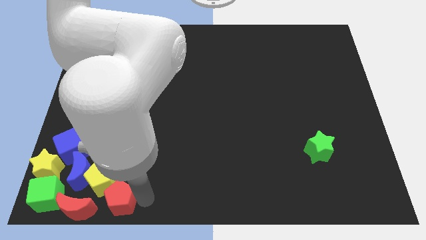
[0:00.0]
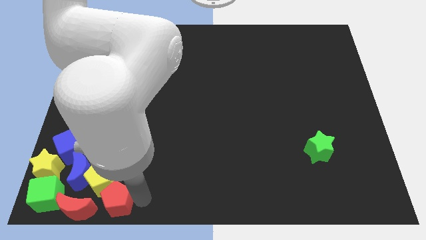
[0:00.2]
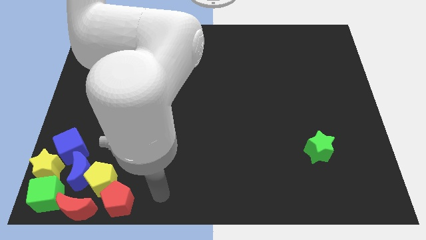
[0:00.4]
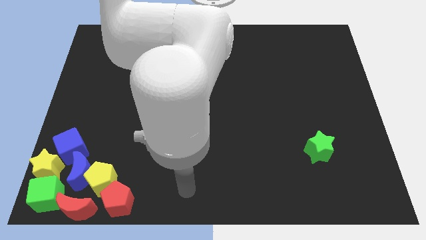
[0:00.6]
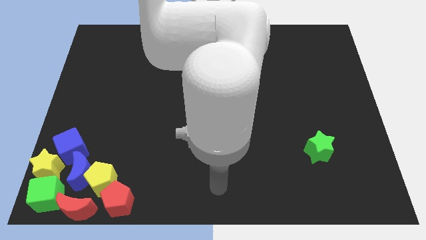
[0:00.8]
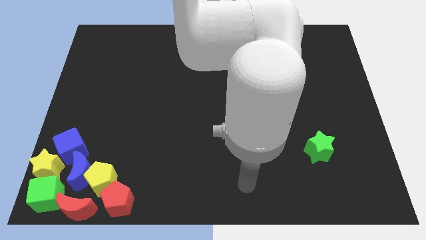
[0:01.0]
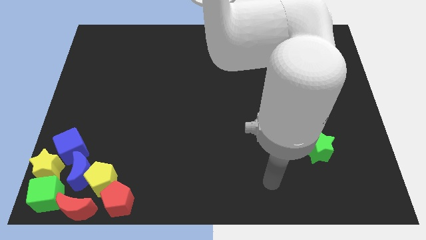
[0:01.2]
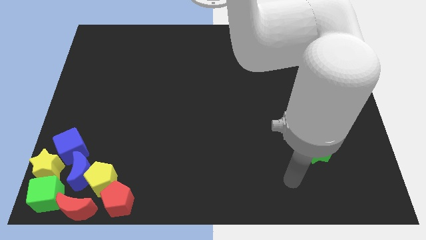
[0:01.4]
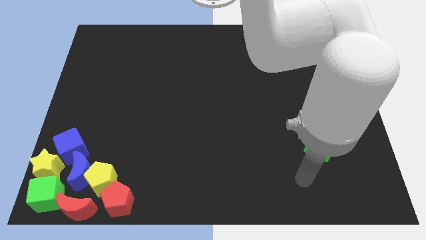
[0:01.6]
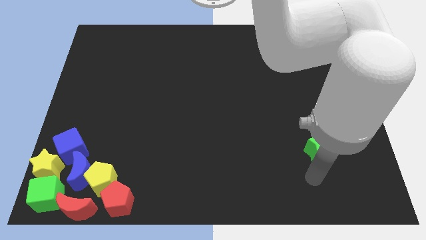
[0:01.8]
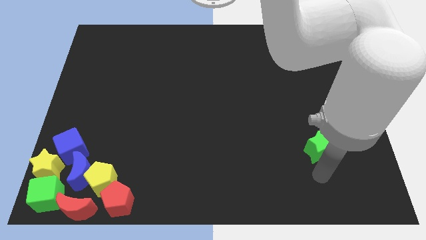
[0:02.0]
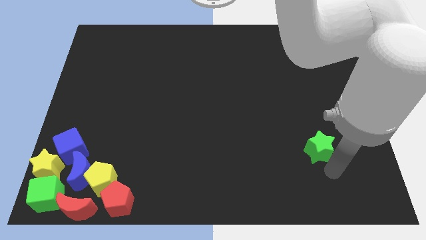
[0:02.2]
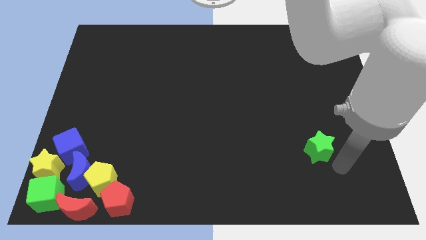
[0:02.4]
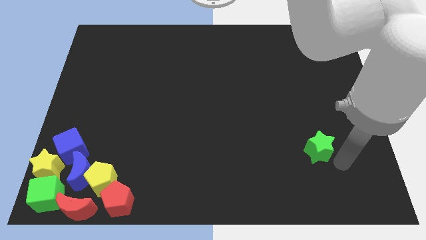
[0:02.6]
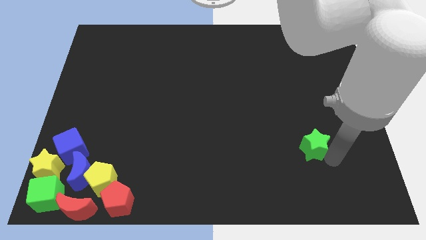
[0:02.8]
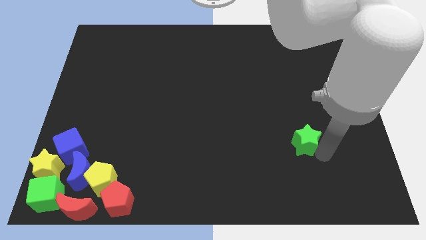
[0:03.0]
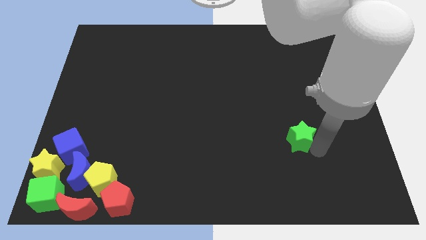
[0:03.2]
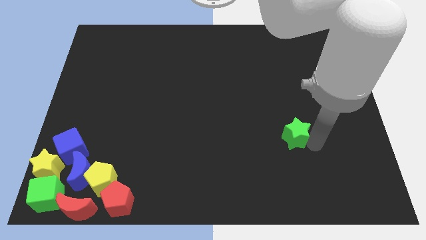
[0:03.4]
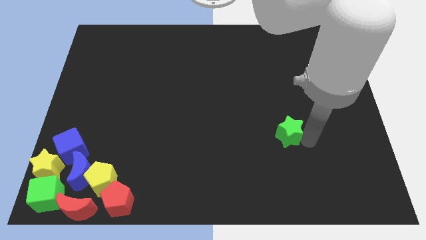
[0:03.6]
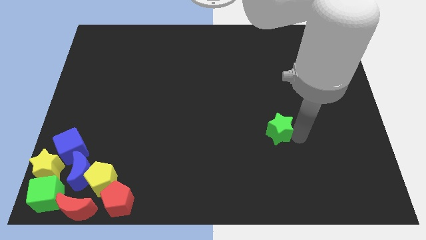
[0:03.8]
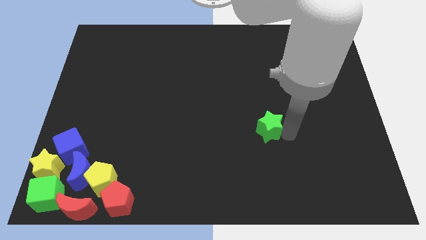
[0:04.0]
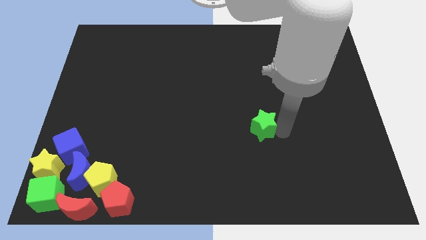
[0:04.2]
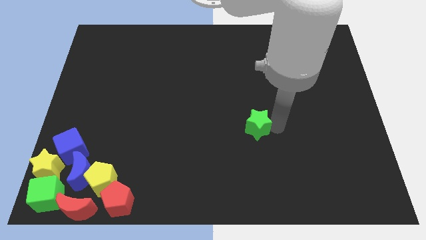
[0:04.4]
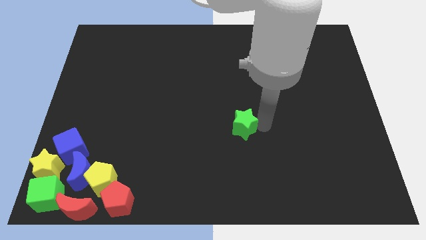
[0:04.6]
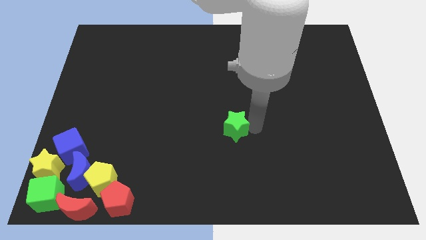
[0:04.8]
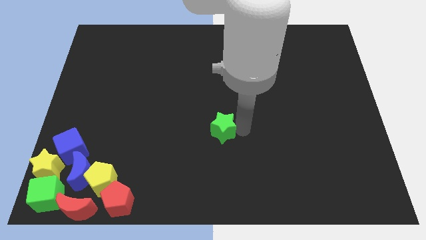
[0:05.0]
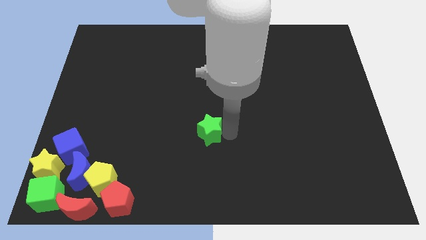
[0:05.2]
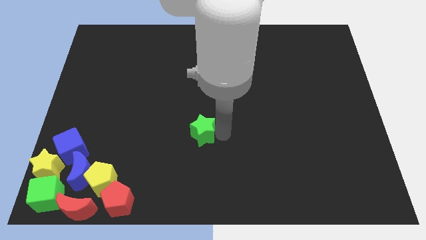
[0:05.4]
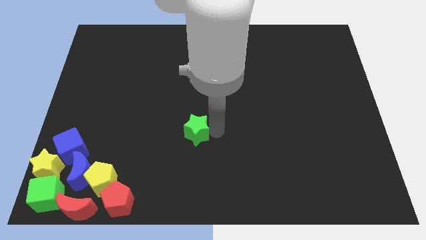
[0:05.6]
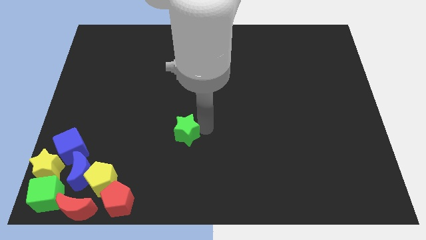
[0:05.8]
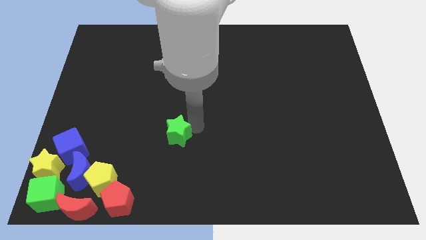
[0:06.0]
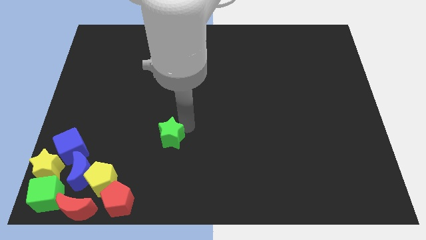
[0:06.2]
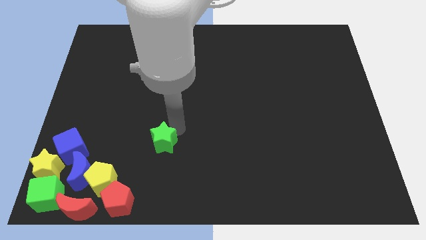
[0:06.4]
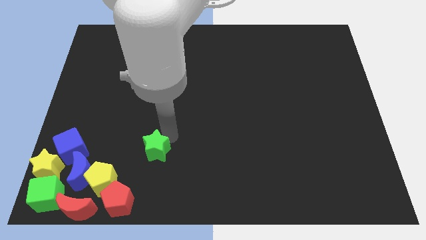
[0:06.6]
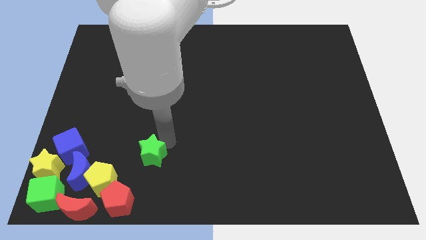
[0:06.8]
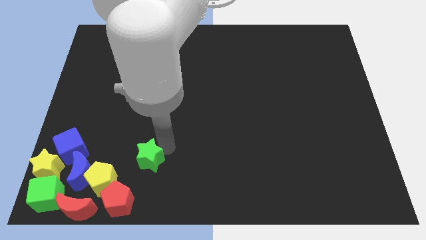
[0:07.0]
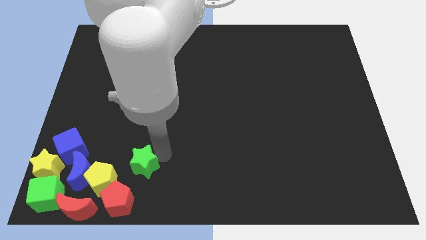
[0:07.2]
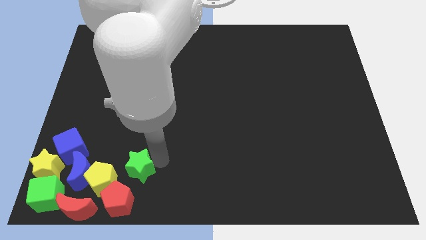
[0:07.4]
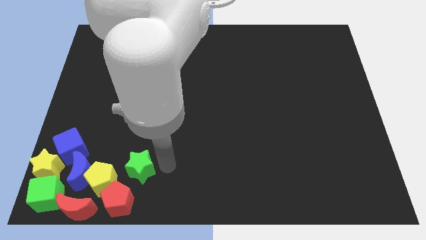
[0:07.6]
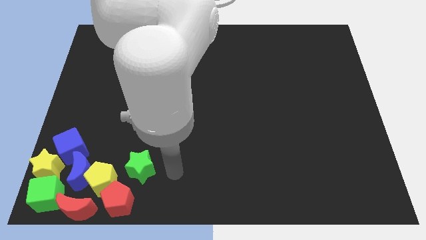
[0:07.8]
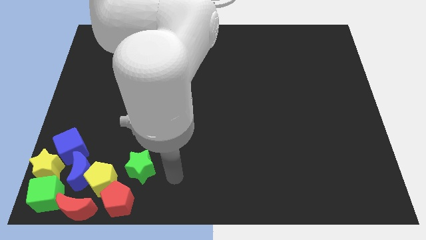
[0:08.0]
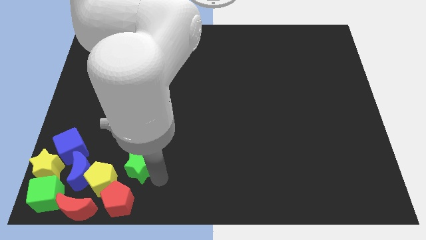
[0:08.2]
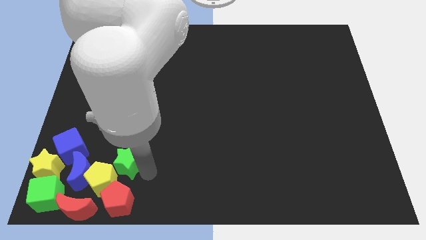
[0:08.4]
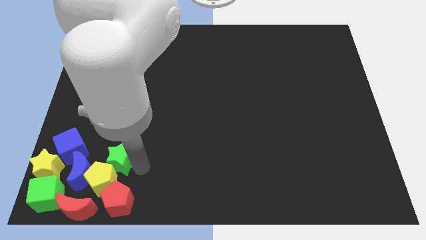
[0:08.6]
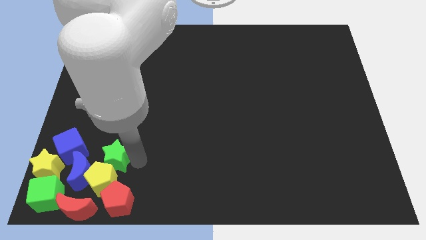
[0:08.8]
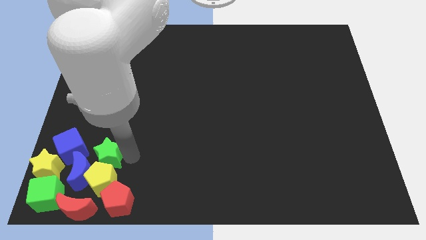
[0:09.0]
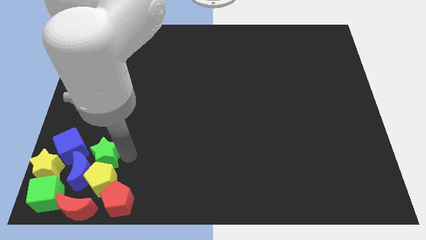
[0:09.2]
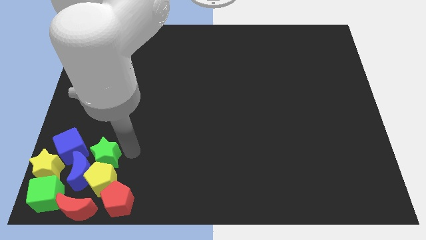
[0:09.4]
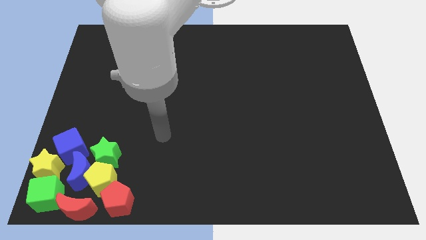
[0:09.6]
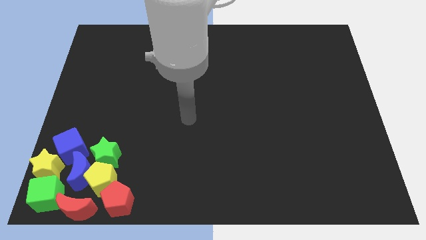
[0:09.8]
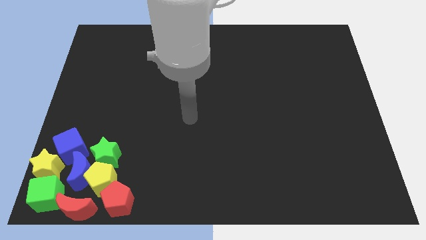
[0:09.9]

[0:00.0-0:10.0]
place the green star above the yellow pentagon

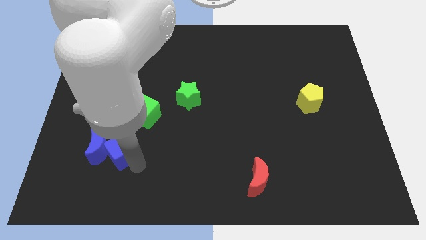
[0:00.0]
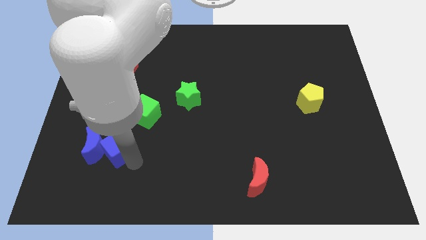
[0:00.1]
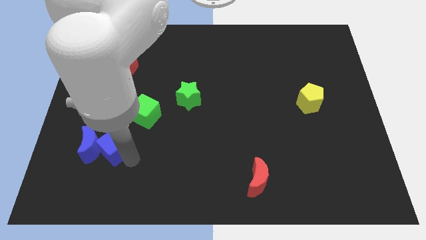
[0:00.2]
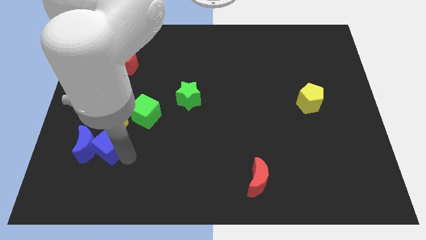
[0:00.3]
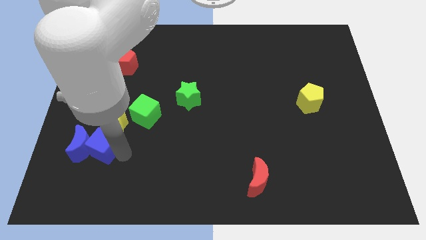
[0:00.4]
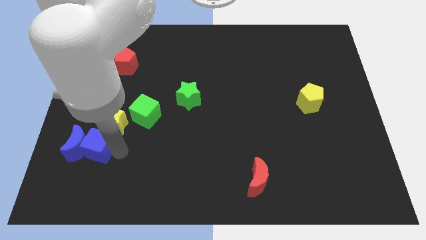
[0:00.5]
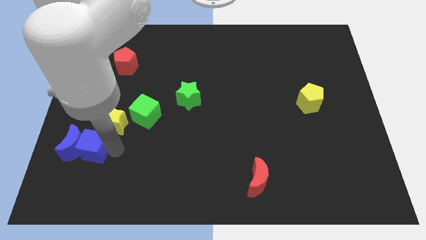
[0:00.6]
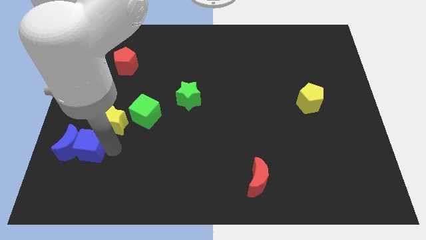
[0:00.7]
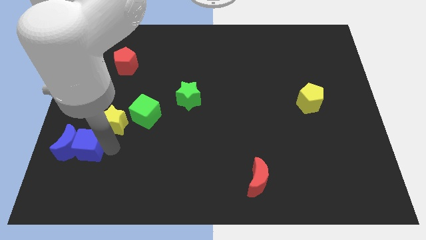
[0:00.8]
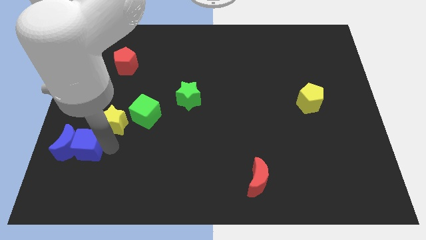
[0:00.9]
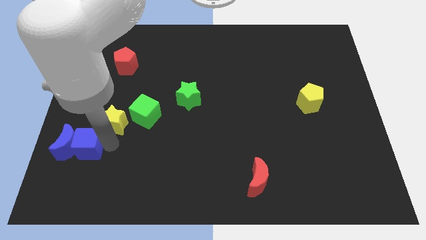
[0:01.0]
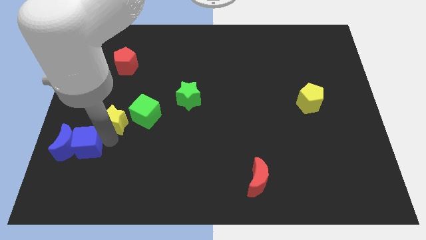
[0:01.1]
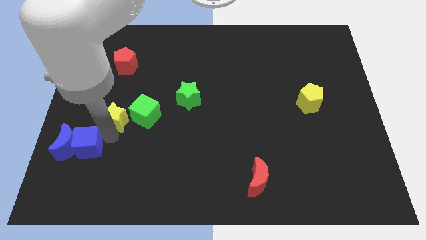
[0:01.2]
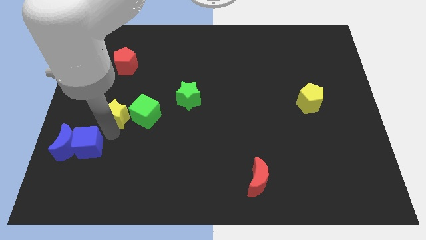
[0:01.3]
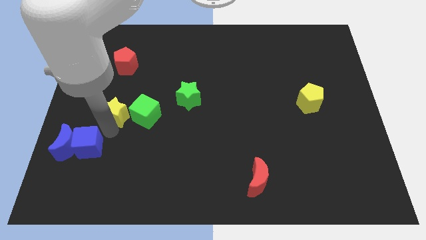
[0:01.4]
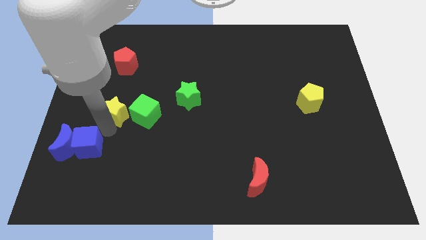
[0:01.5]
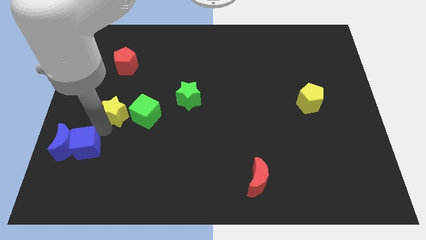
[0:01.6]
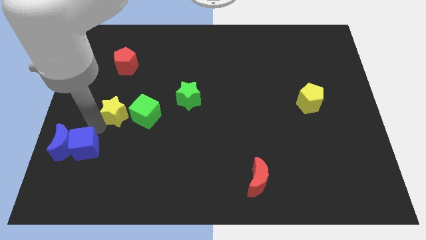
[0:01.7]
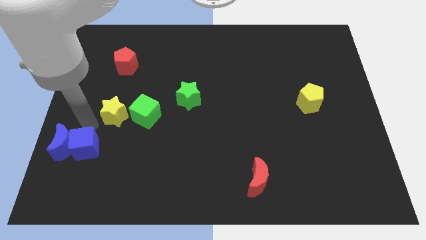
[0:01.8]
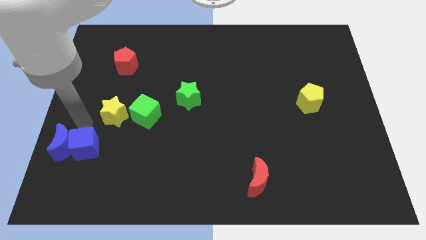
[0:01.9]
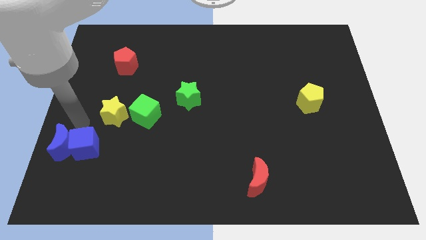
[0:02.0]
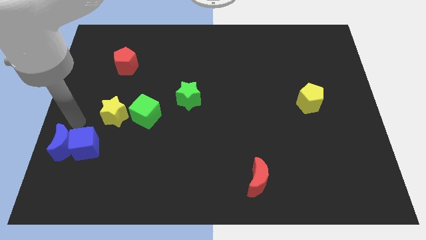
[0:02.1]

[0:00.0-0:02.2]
move the blue cube and blue crescent towards the left side of the board

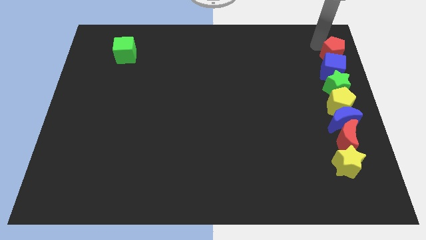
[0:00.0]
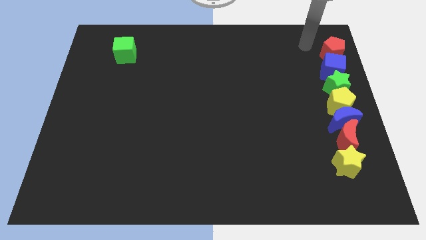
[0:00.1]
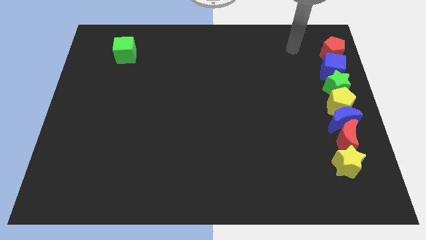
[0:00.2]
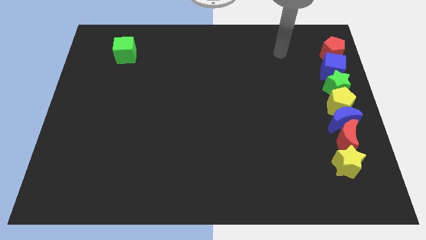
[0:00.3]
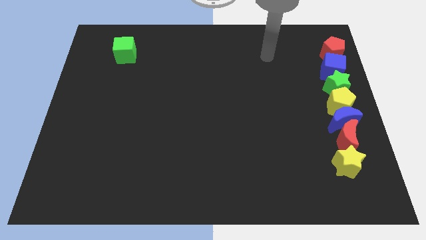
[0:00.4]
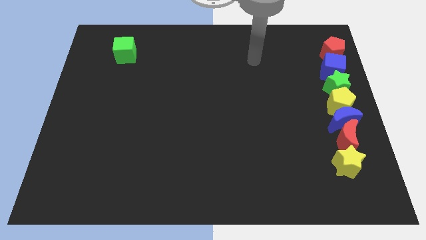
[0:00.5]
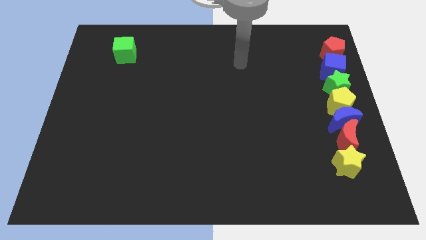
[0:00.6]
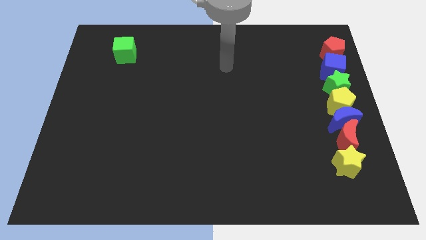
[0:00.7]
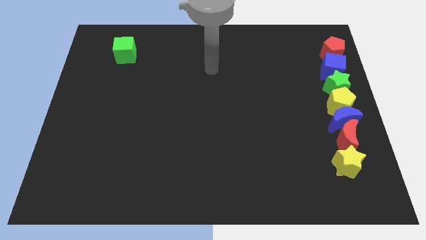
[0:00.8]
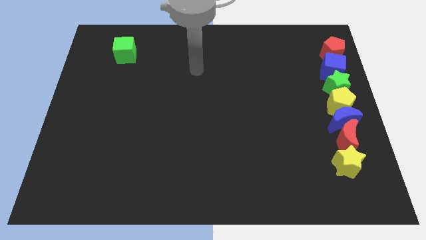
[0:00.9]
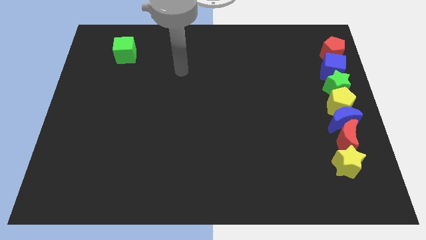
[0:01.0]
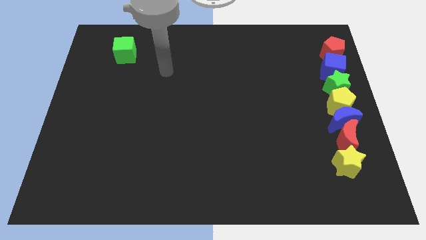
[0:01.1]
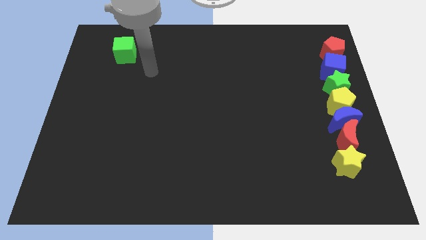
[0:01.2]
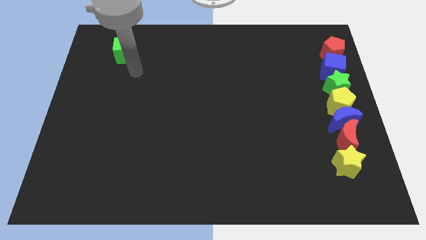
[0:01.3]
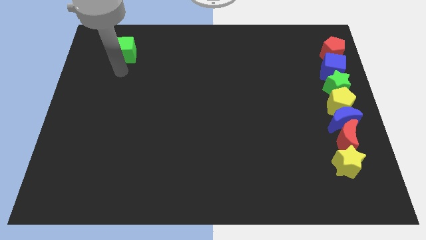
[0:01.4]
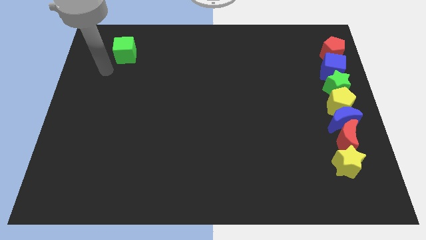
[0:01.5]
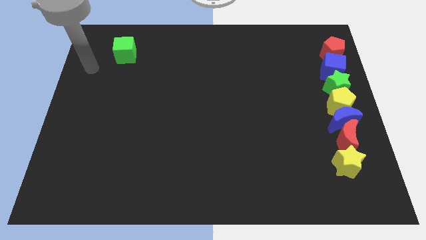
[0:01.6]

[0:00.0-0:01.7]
move your arm away from red pentagon
